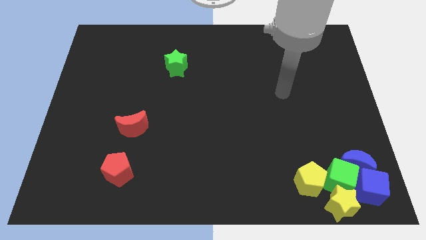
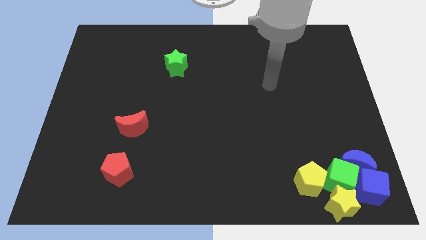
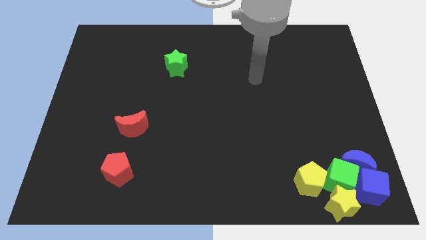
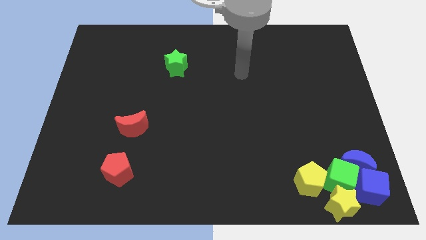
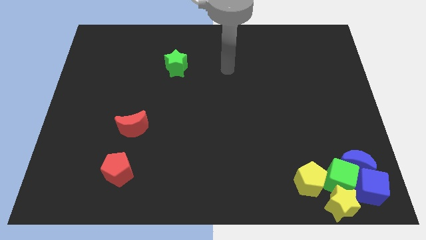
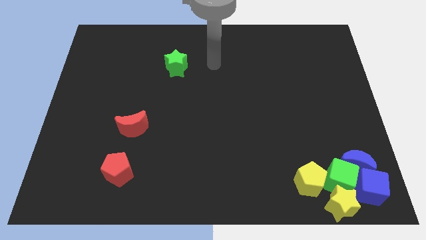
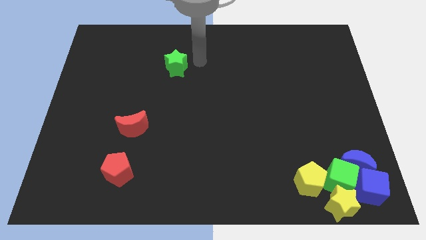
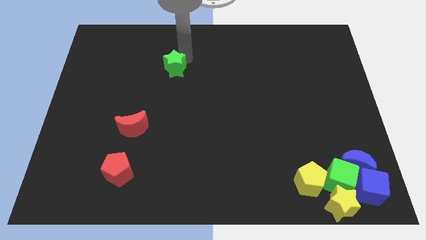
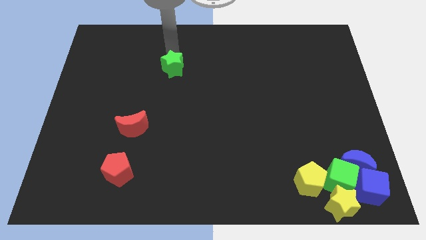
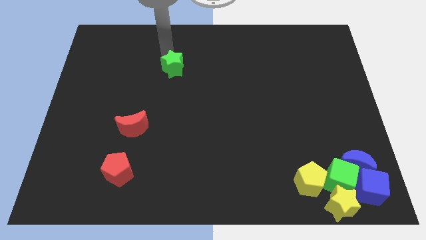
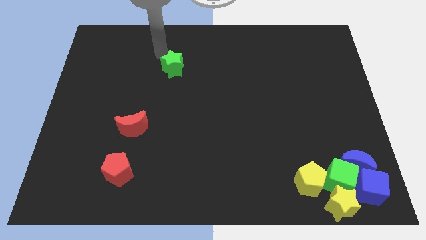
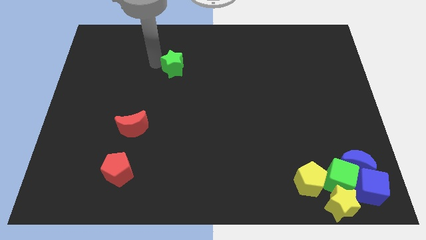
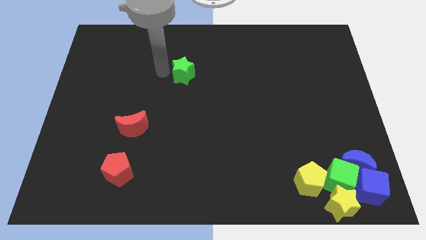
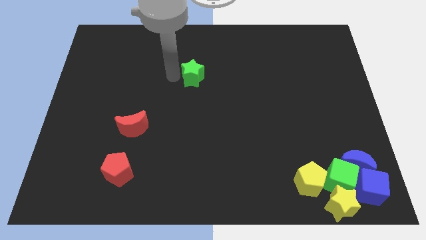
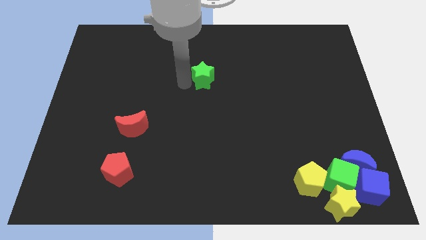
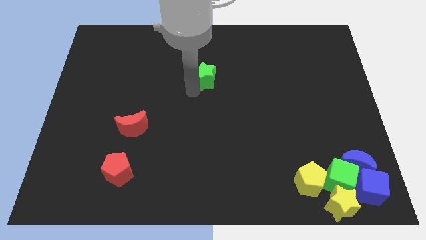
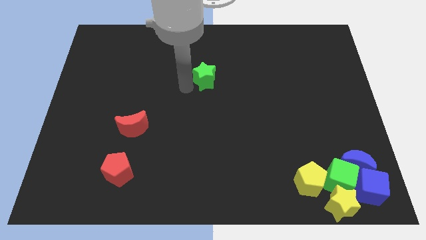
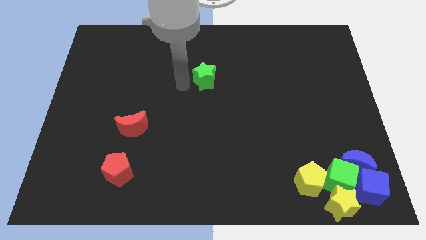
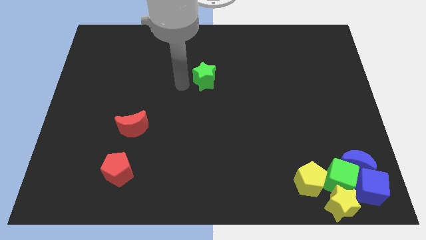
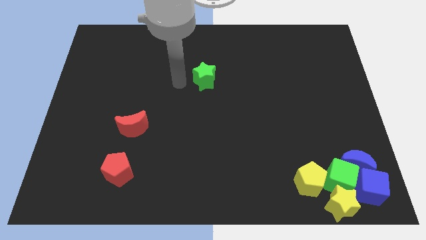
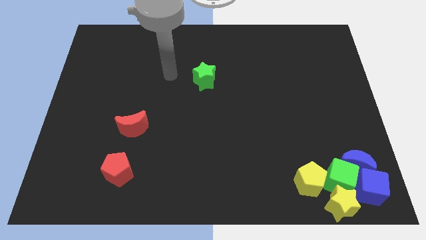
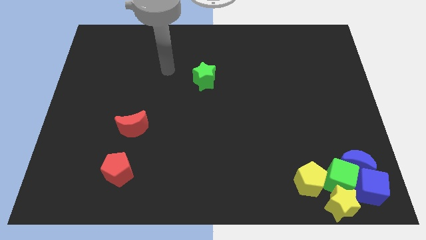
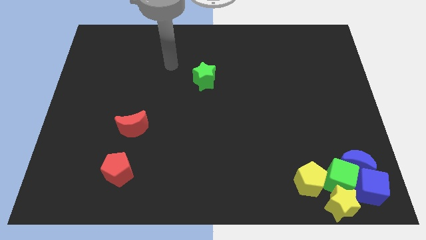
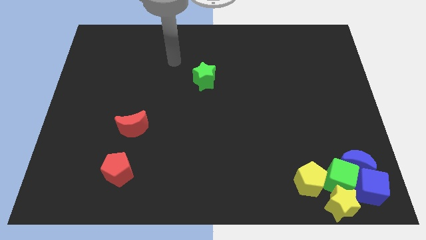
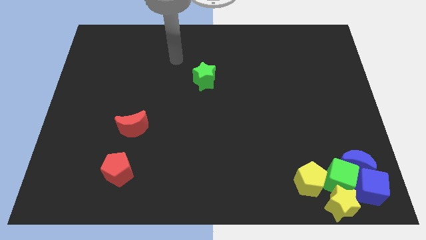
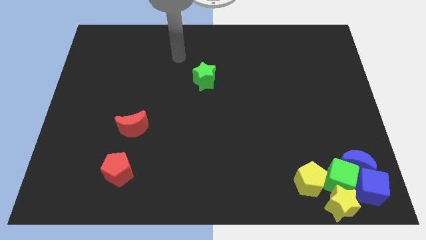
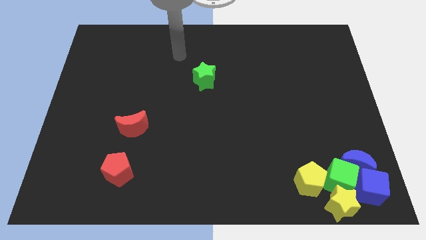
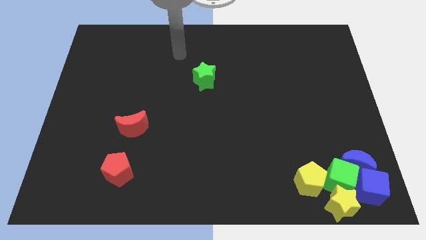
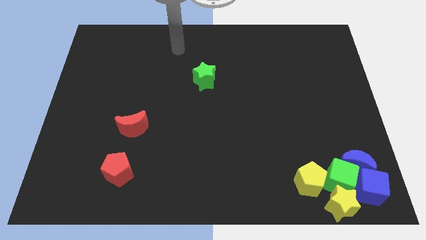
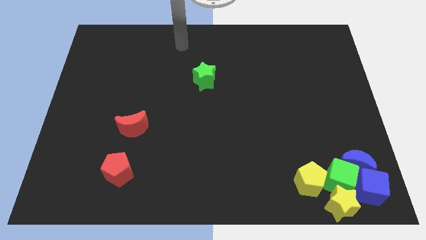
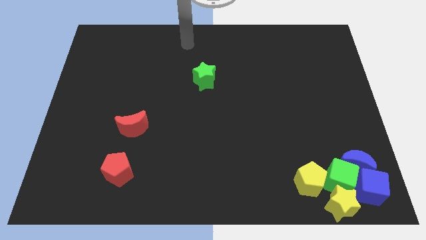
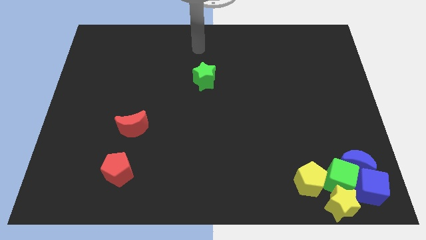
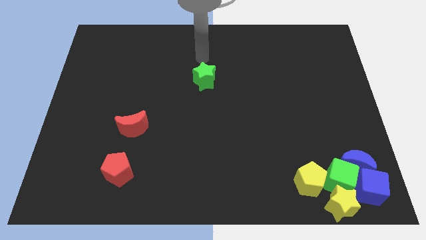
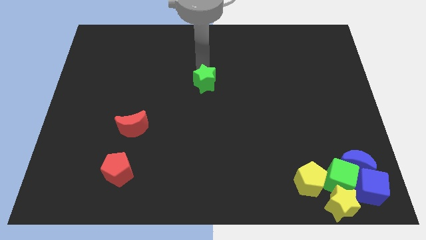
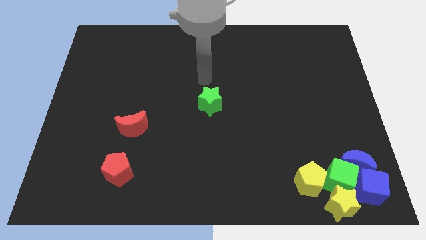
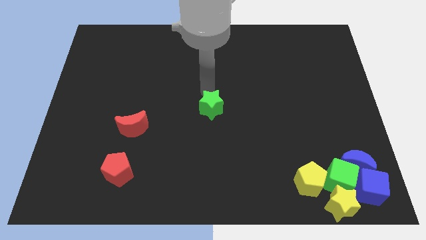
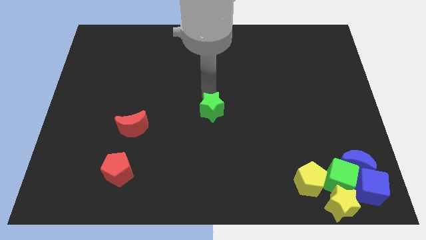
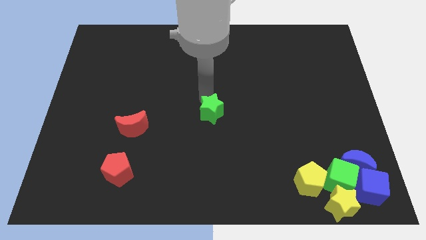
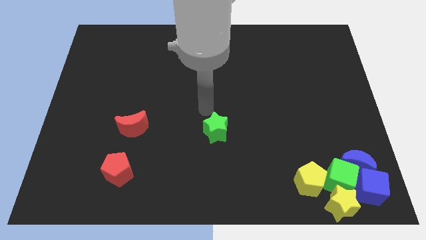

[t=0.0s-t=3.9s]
move green star to the center of the board

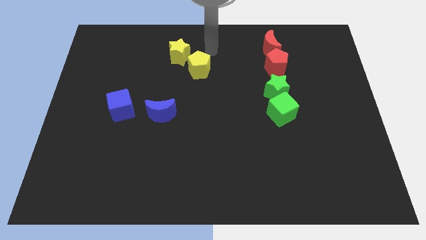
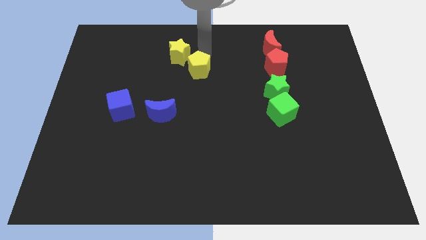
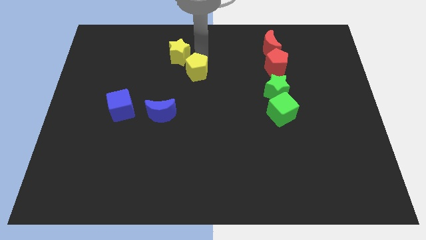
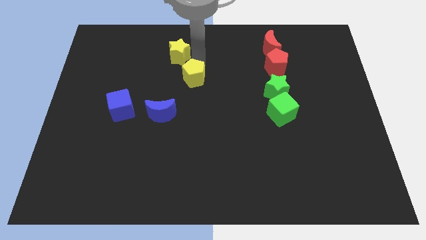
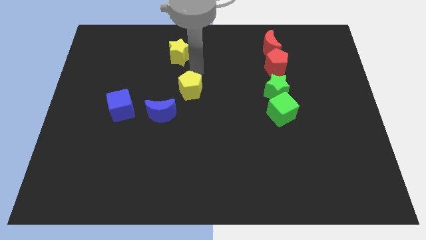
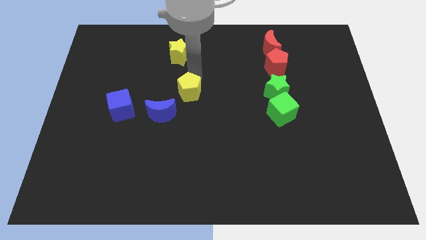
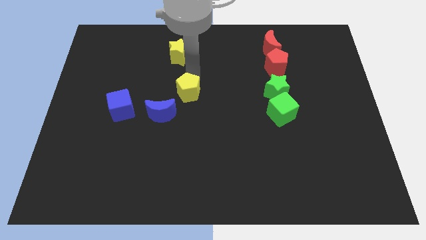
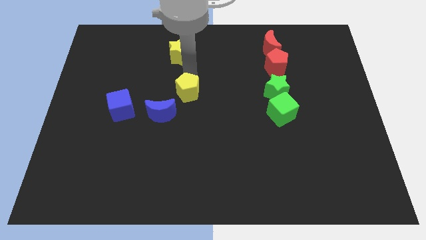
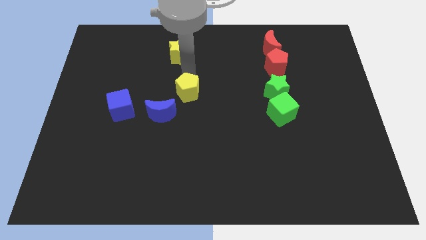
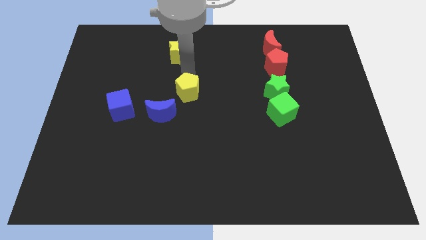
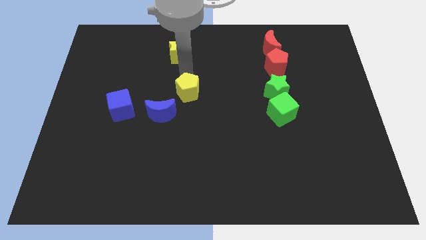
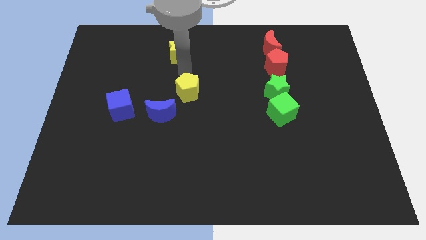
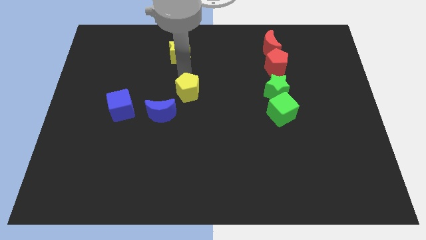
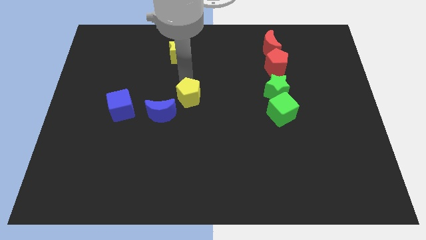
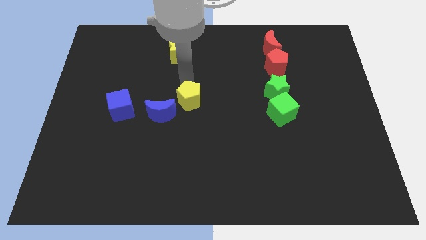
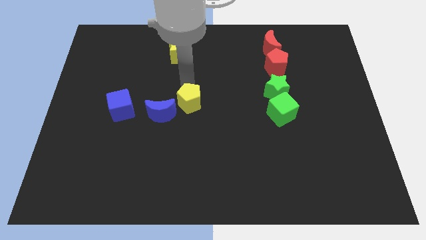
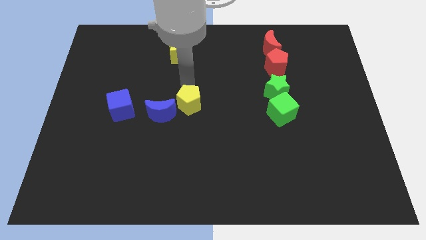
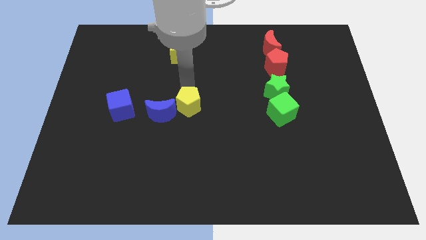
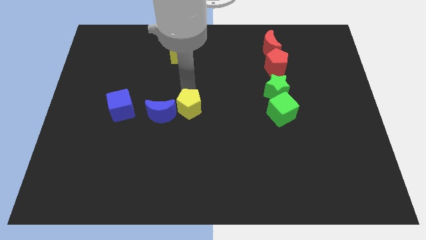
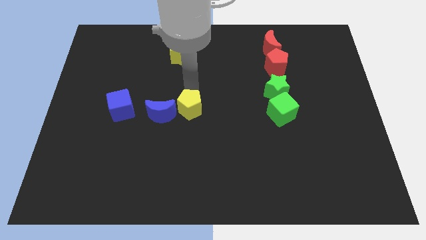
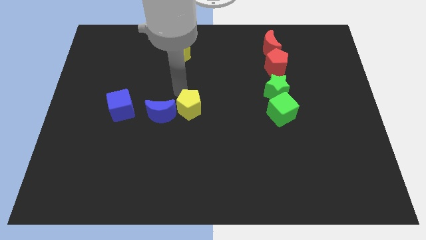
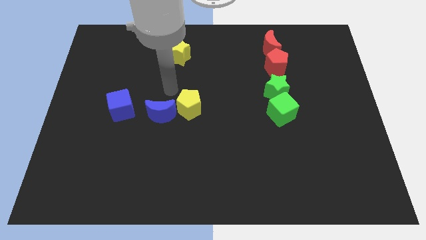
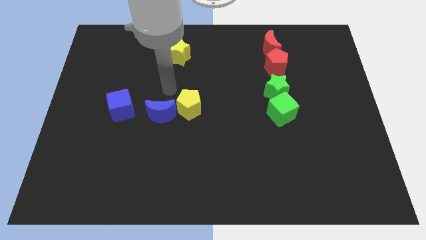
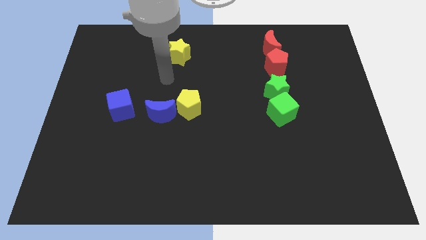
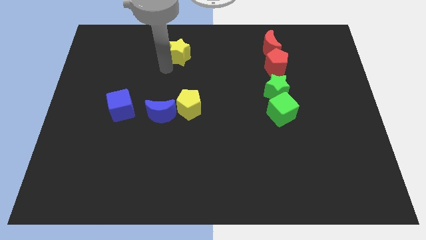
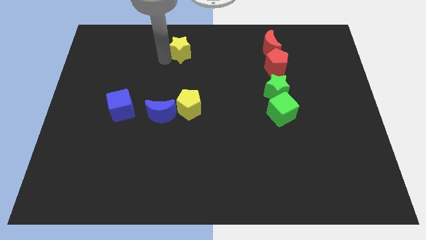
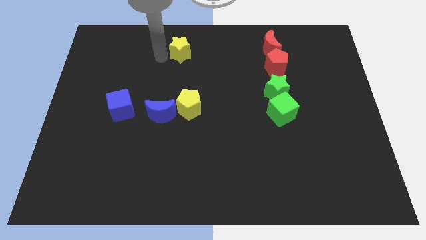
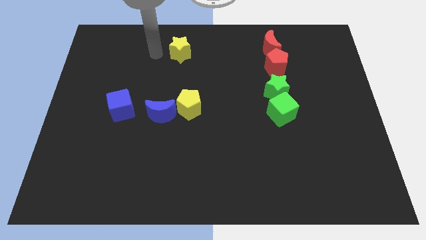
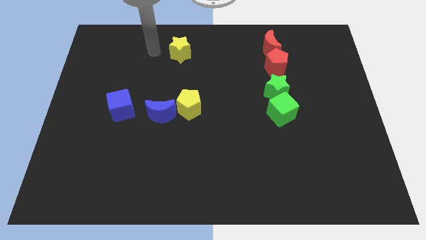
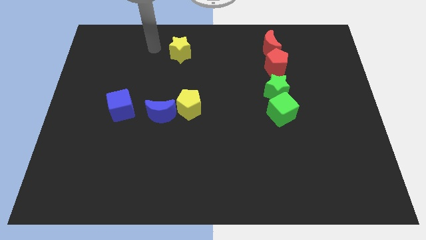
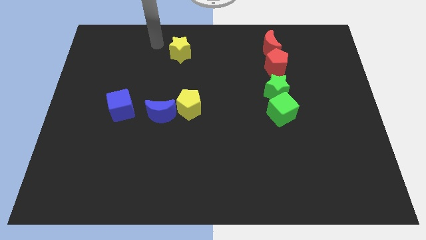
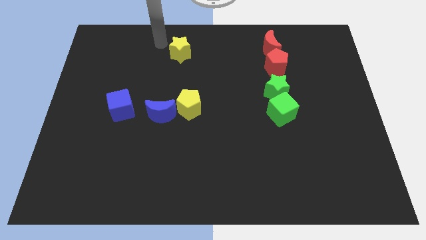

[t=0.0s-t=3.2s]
put the yellow pentagon parallel right to the blue moon

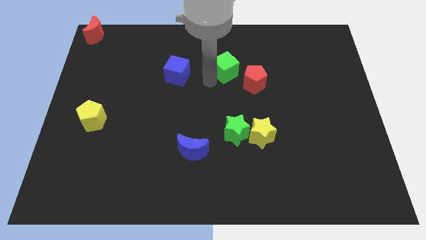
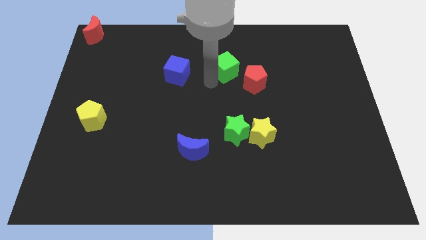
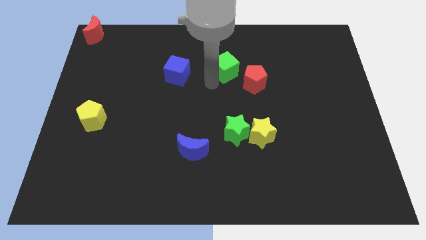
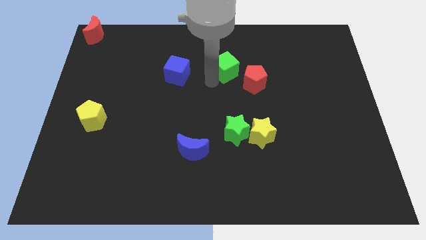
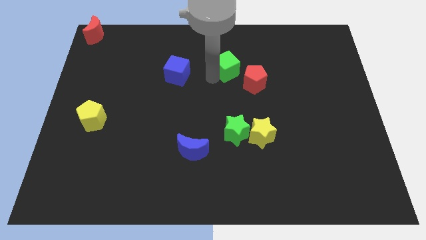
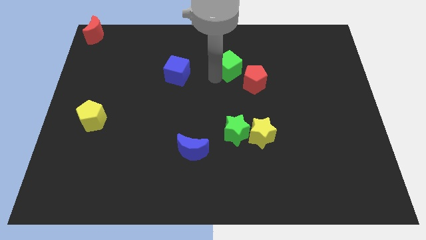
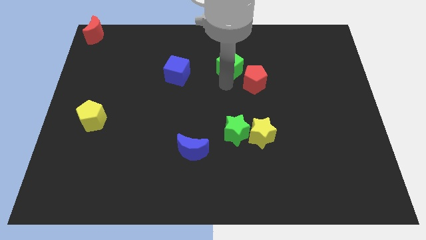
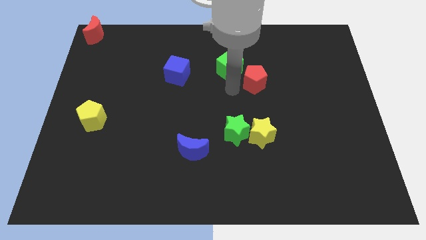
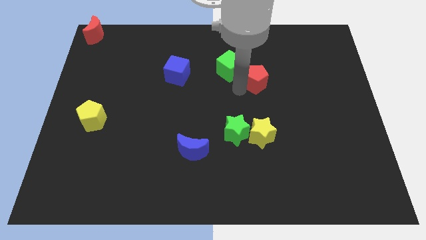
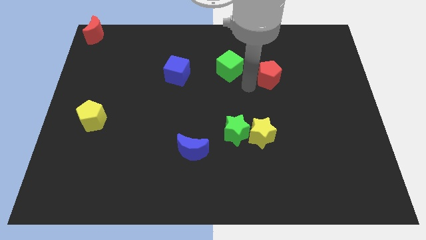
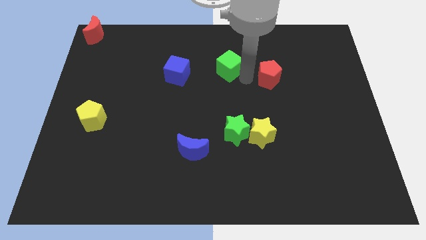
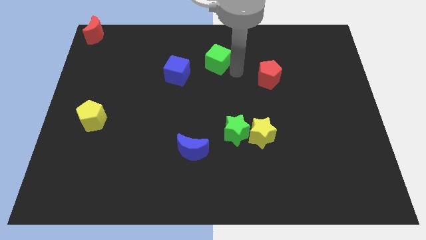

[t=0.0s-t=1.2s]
slightly move the red pentagon towards the right

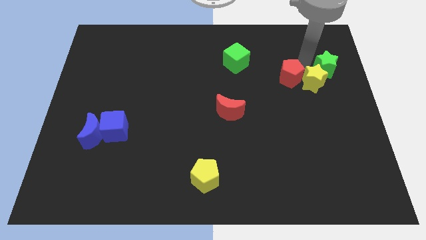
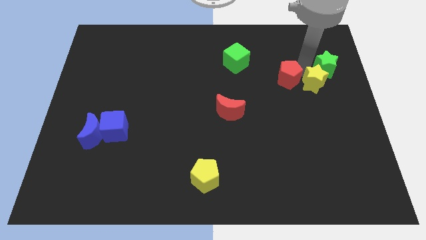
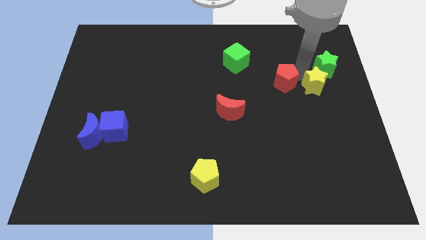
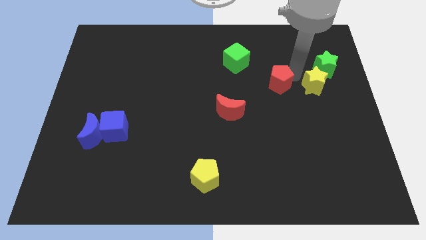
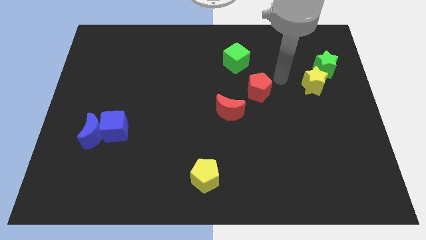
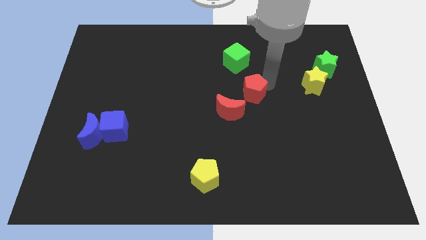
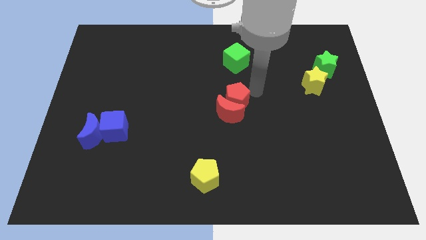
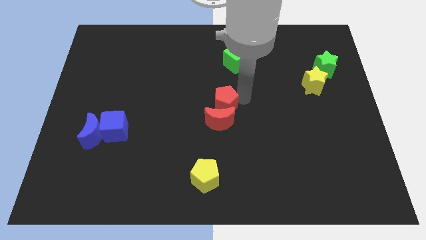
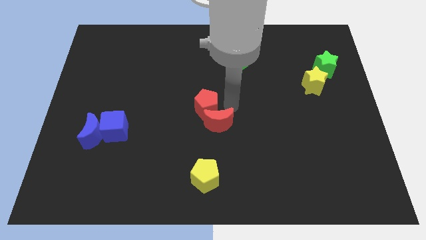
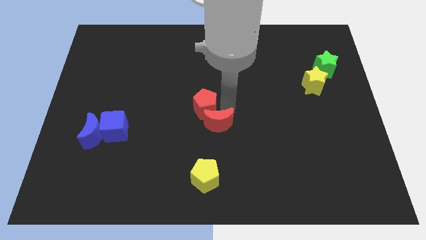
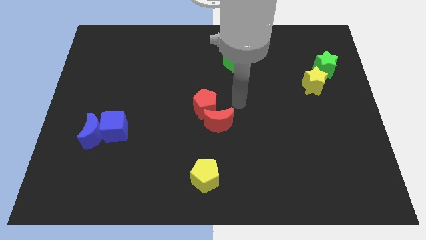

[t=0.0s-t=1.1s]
move the red pentagon to the center of the board
